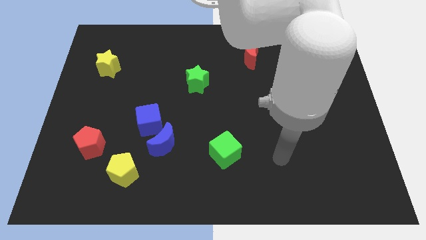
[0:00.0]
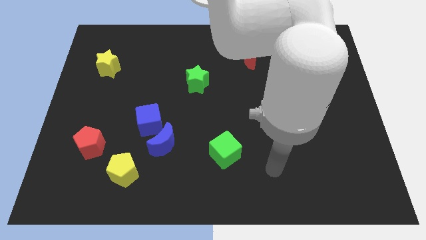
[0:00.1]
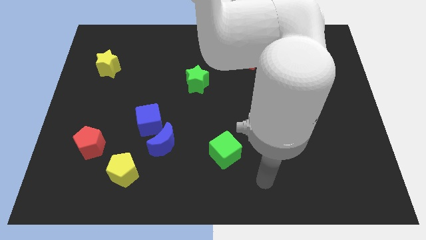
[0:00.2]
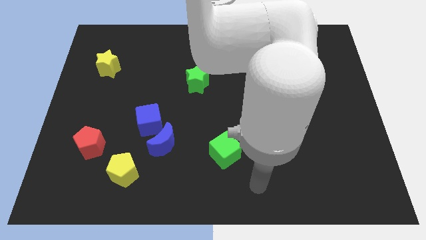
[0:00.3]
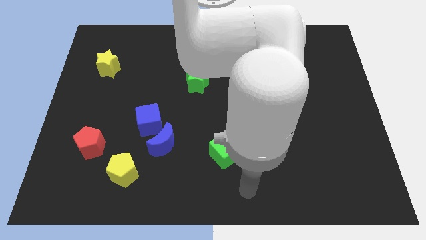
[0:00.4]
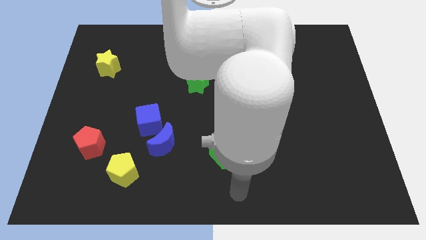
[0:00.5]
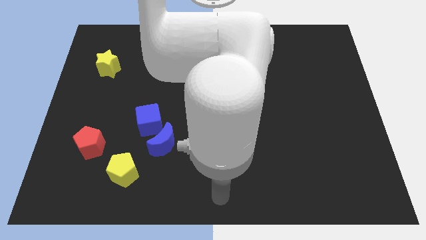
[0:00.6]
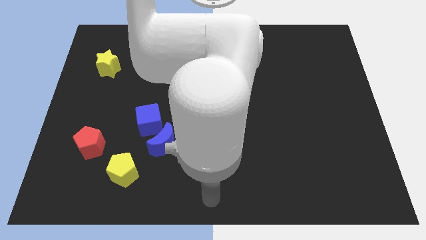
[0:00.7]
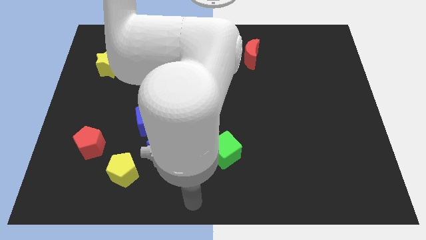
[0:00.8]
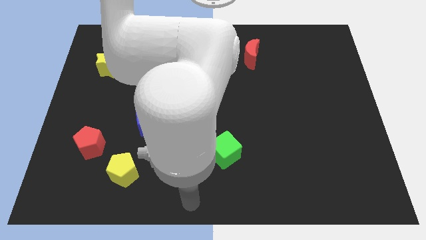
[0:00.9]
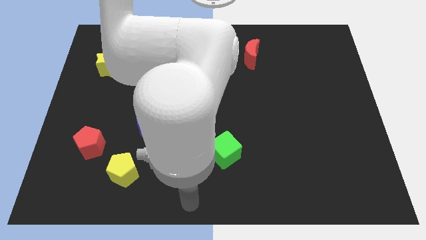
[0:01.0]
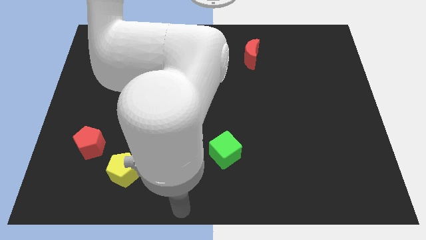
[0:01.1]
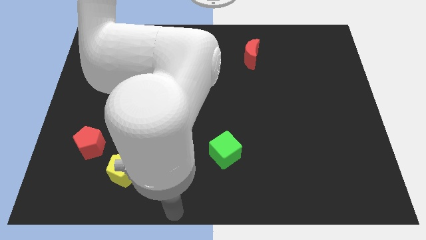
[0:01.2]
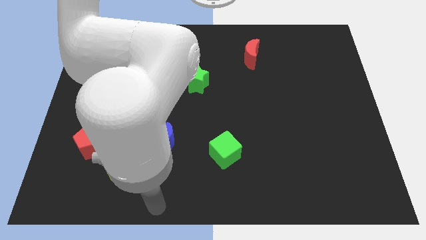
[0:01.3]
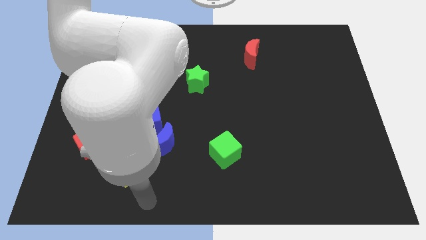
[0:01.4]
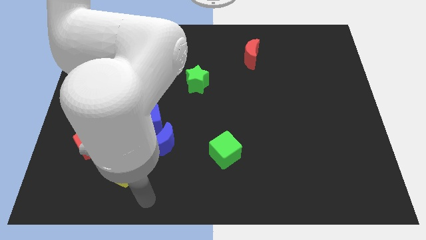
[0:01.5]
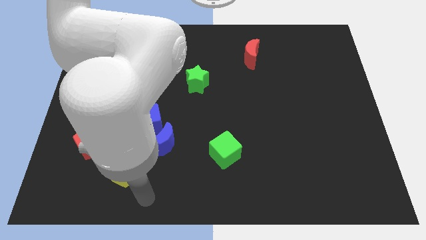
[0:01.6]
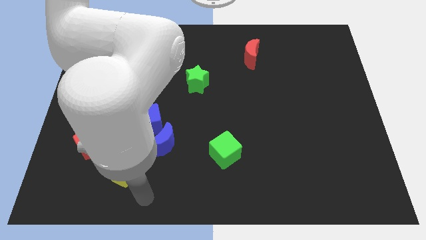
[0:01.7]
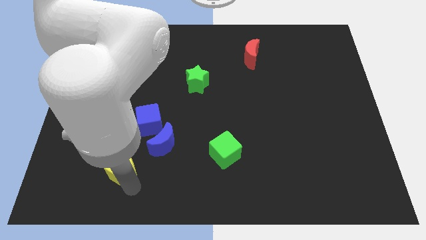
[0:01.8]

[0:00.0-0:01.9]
move your arm towards the yellow pentagon

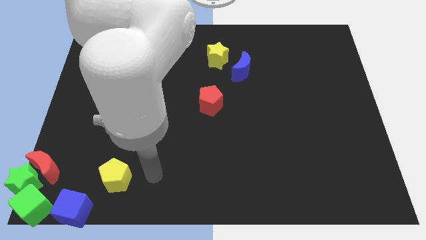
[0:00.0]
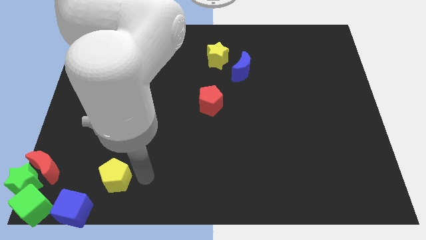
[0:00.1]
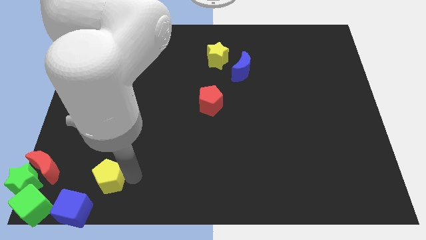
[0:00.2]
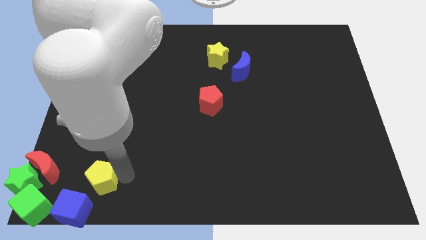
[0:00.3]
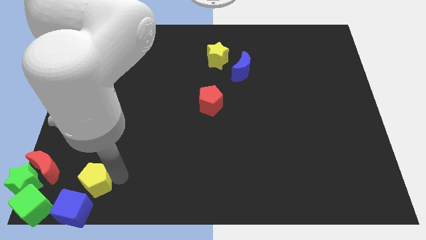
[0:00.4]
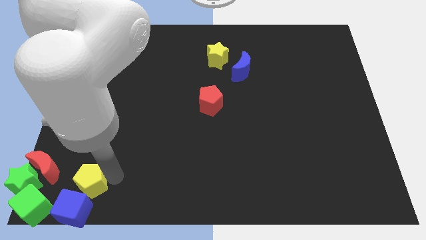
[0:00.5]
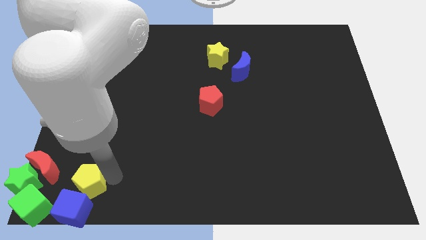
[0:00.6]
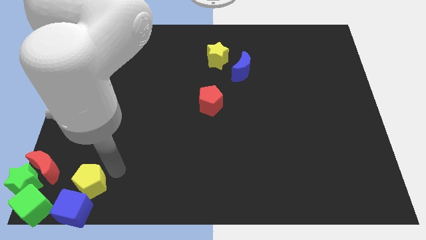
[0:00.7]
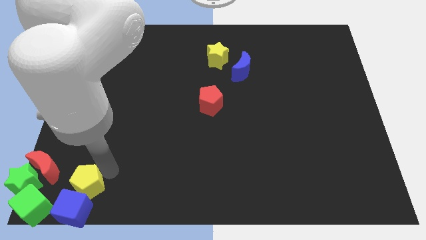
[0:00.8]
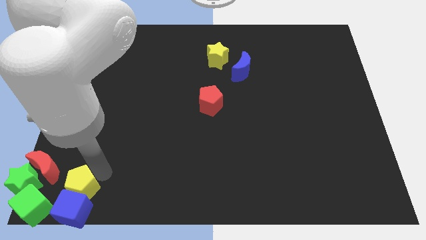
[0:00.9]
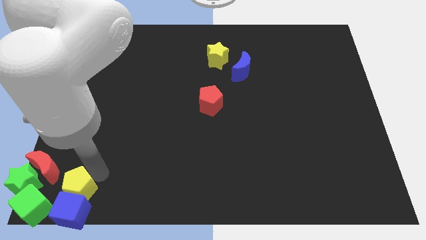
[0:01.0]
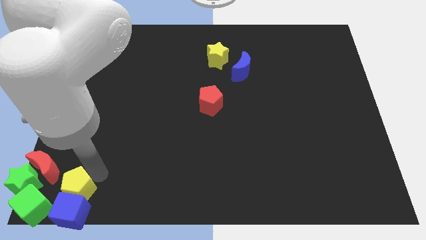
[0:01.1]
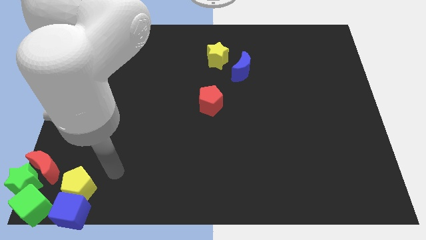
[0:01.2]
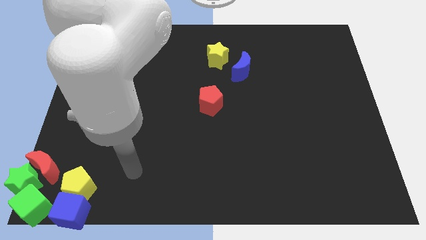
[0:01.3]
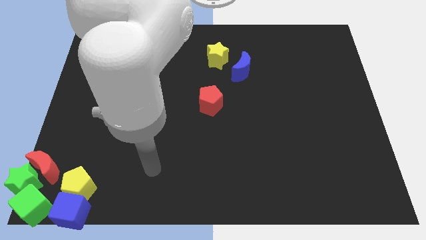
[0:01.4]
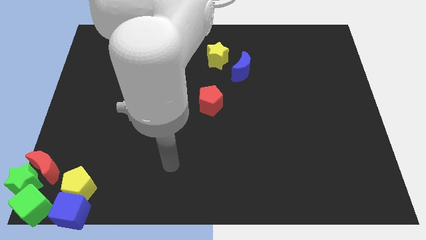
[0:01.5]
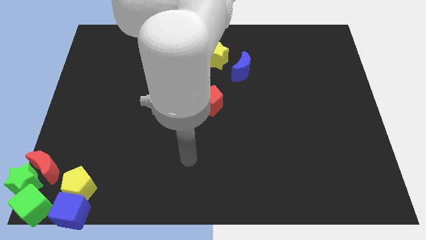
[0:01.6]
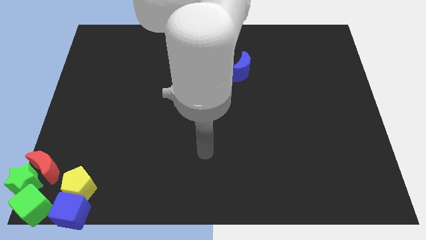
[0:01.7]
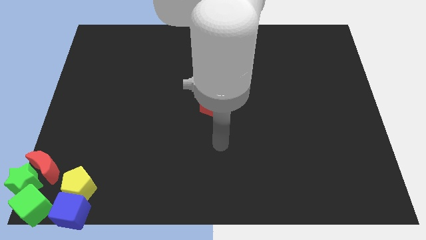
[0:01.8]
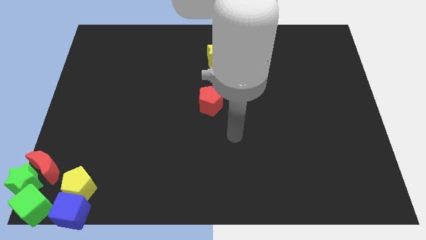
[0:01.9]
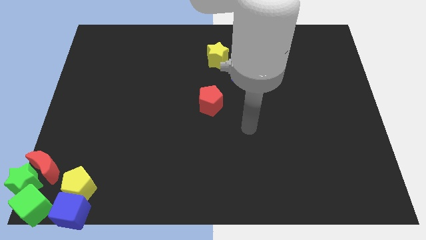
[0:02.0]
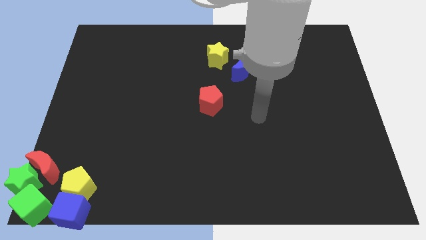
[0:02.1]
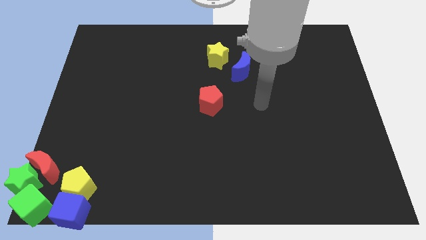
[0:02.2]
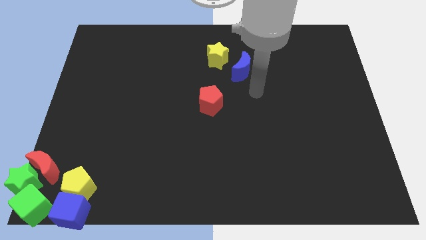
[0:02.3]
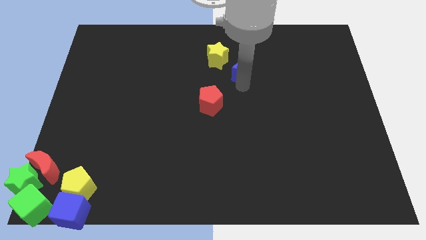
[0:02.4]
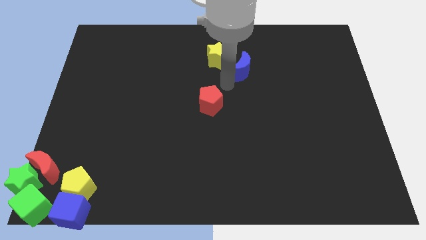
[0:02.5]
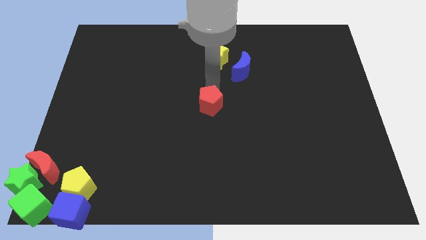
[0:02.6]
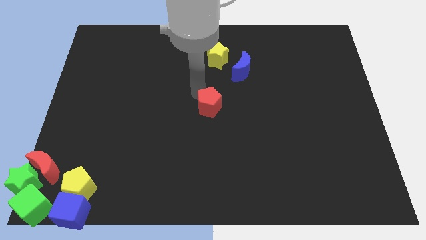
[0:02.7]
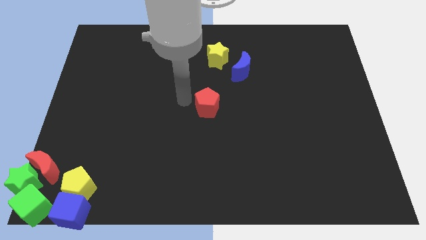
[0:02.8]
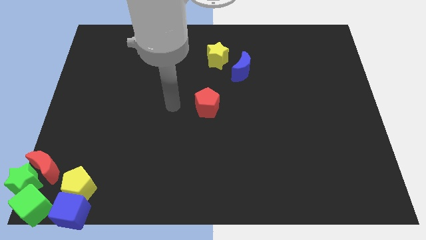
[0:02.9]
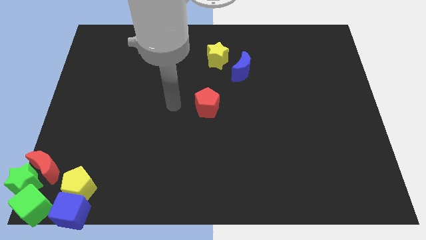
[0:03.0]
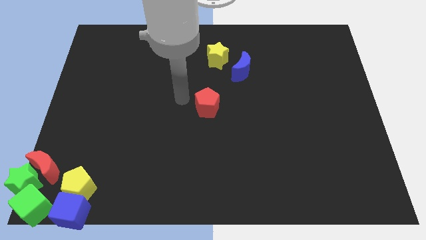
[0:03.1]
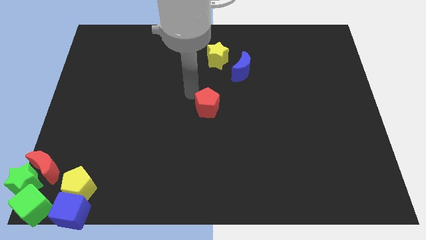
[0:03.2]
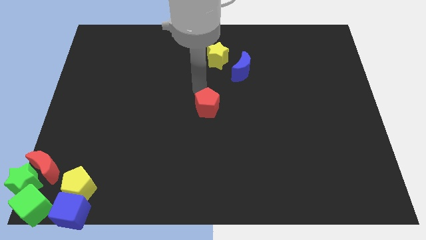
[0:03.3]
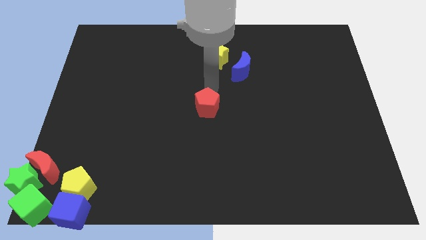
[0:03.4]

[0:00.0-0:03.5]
place the yellow pentagon on top of the blue cube

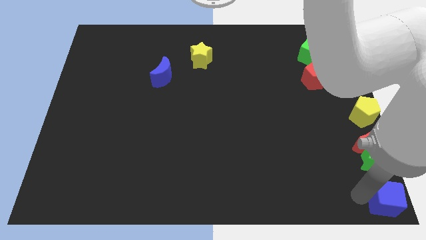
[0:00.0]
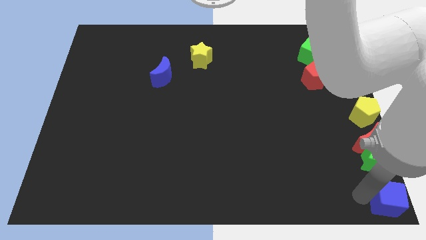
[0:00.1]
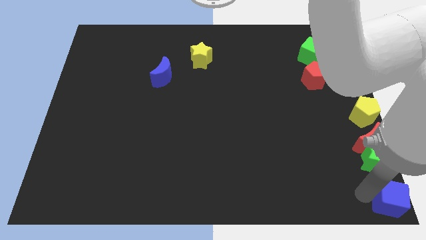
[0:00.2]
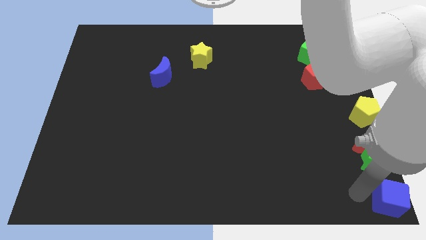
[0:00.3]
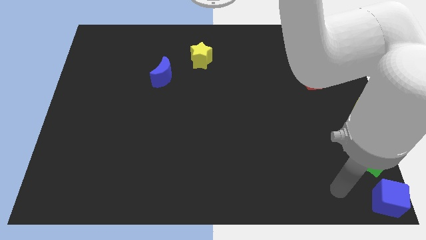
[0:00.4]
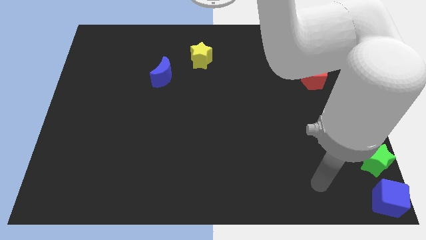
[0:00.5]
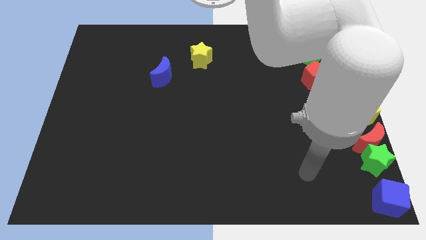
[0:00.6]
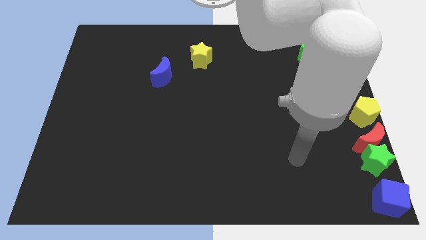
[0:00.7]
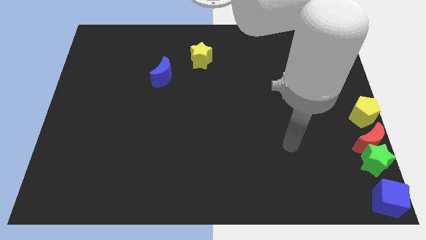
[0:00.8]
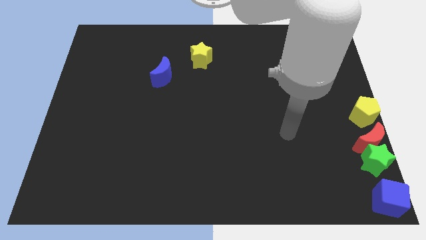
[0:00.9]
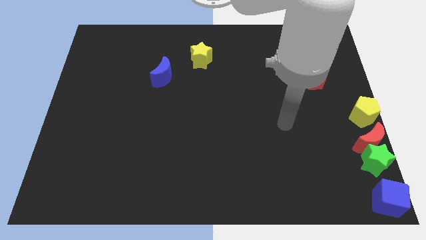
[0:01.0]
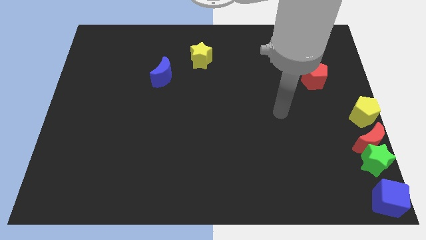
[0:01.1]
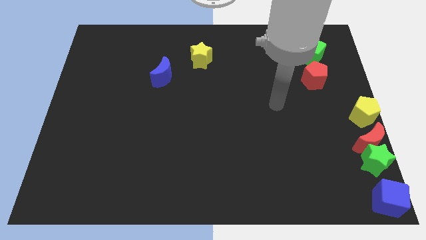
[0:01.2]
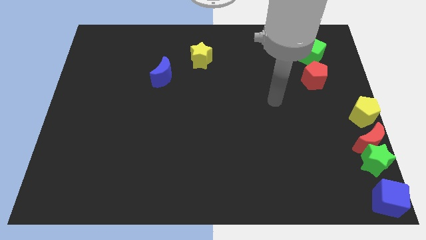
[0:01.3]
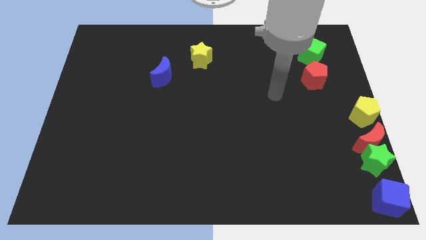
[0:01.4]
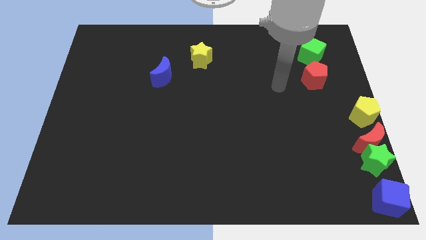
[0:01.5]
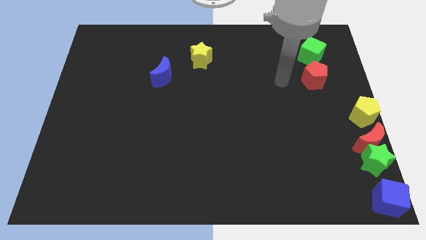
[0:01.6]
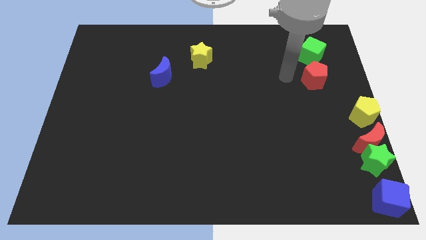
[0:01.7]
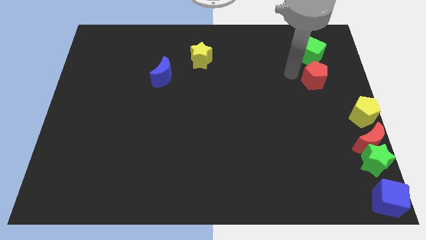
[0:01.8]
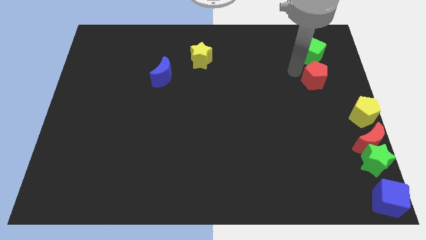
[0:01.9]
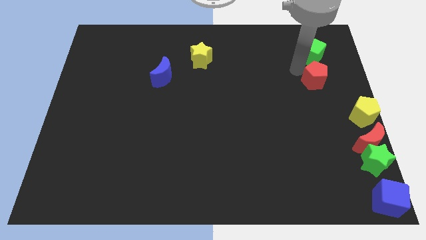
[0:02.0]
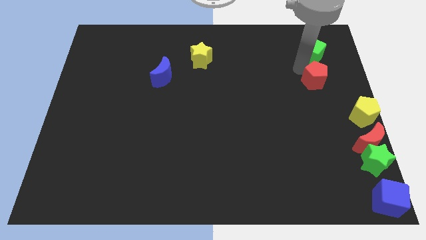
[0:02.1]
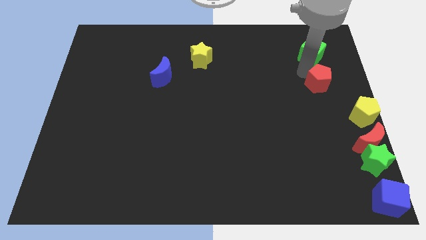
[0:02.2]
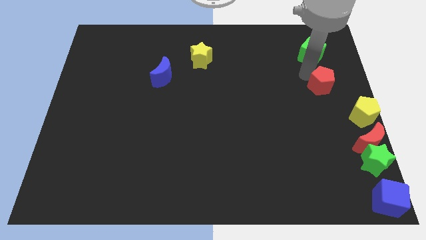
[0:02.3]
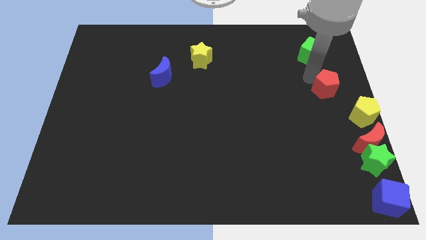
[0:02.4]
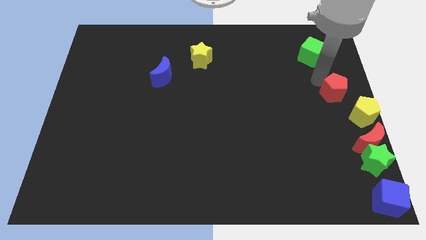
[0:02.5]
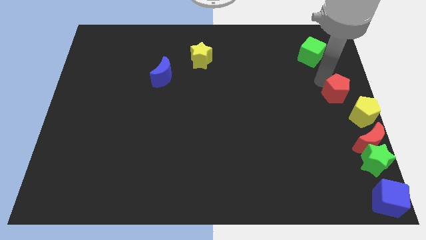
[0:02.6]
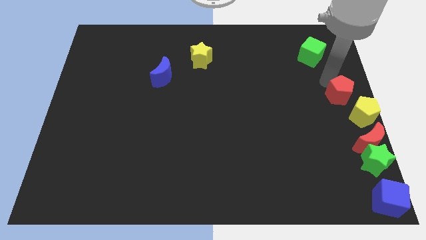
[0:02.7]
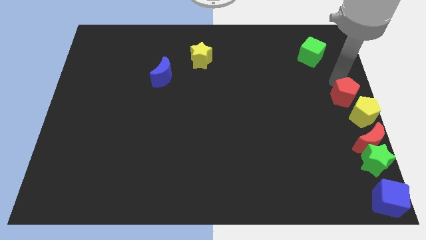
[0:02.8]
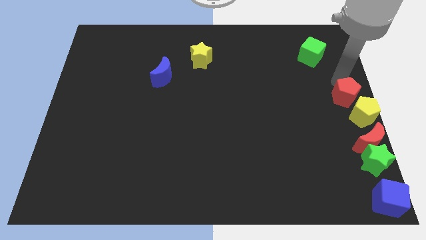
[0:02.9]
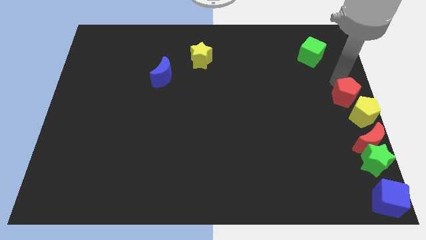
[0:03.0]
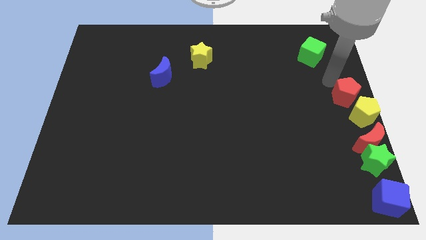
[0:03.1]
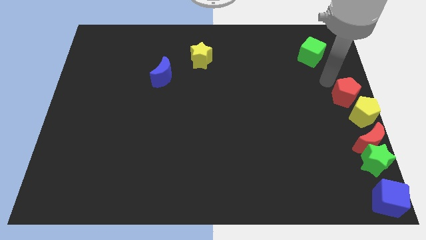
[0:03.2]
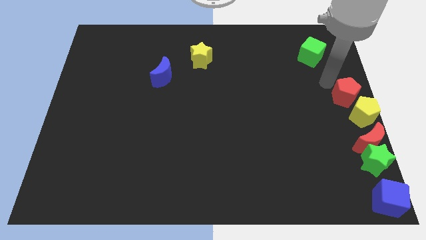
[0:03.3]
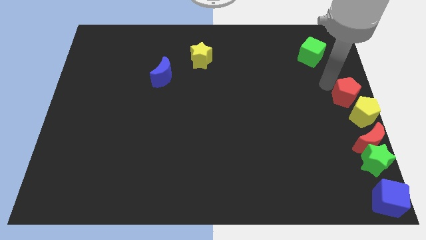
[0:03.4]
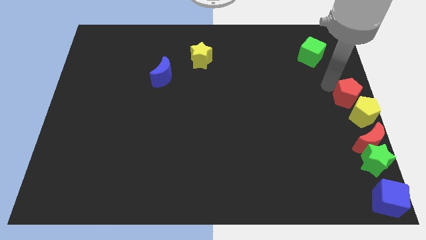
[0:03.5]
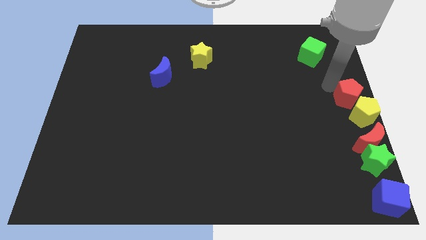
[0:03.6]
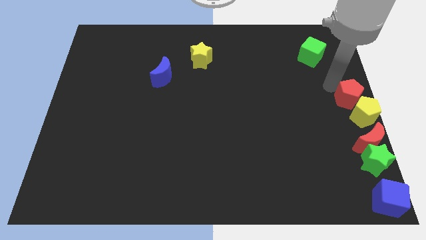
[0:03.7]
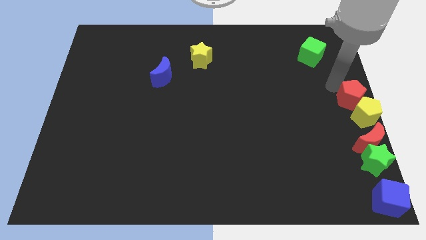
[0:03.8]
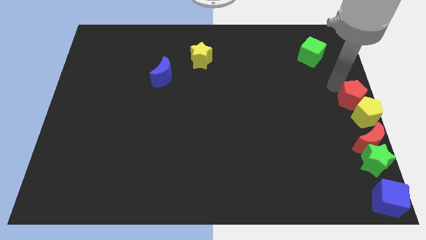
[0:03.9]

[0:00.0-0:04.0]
move red pentagon diagonally left above the yellow pentagon
